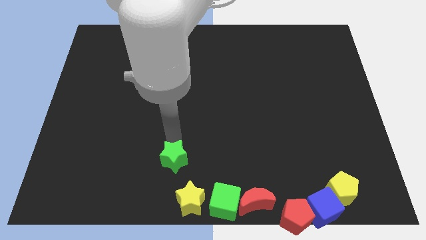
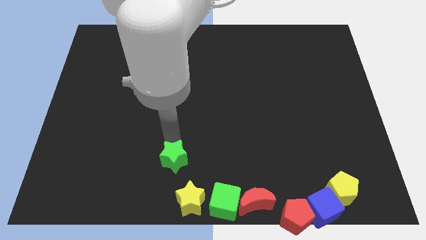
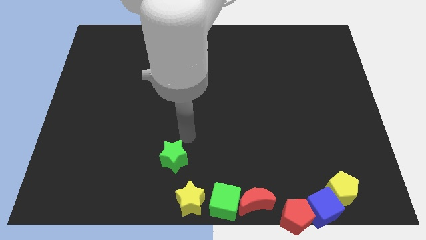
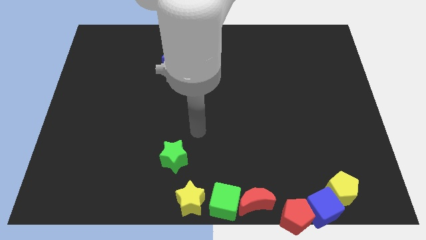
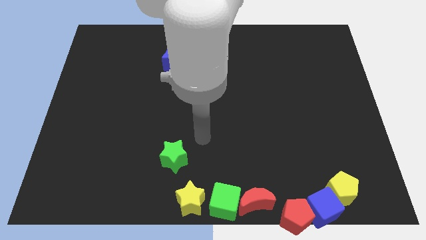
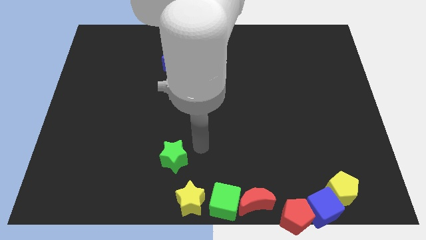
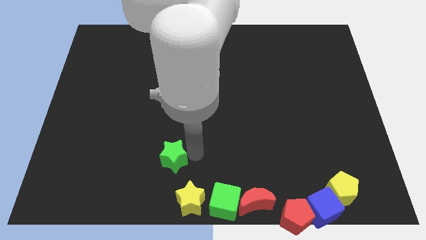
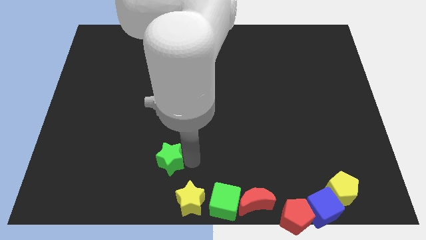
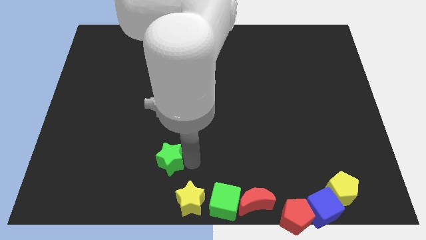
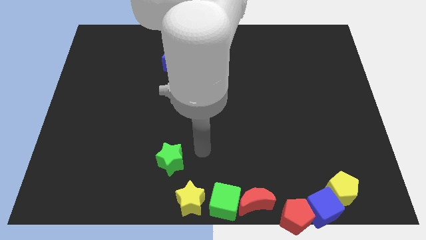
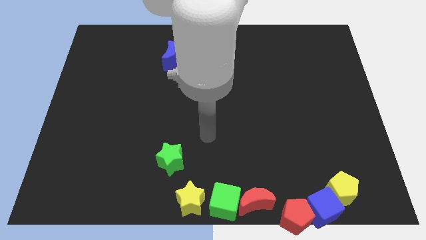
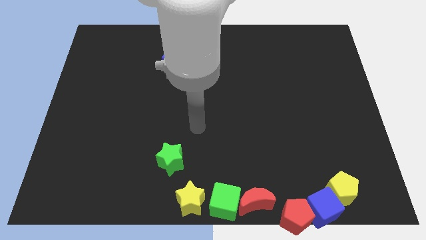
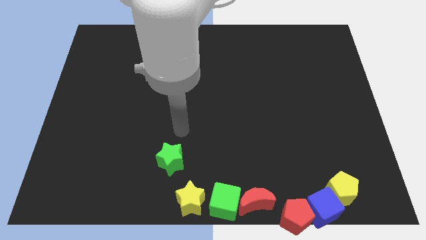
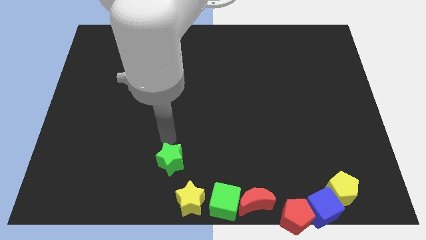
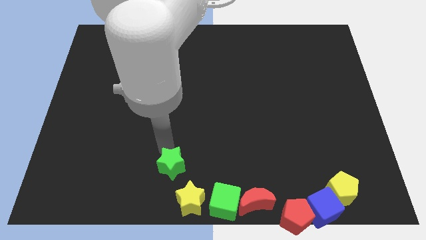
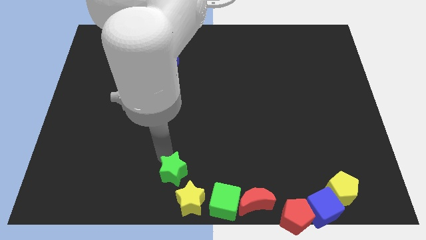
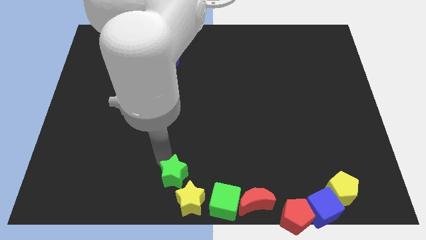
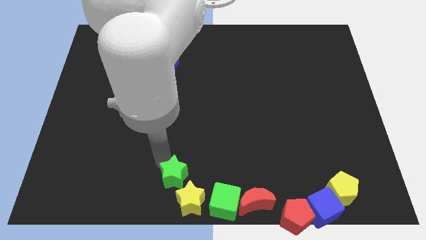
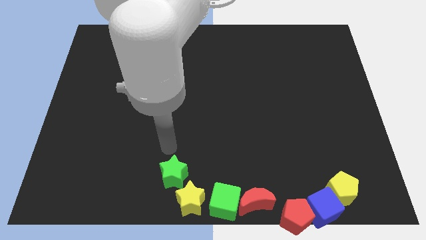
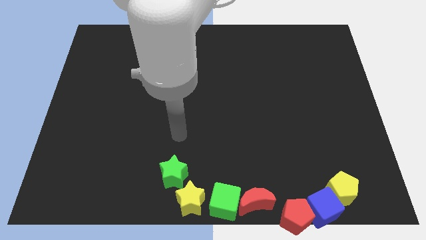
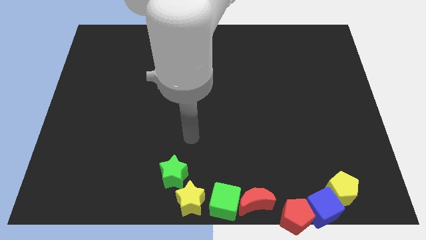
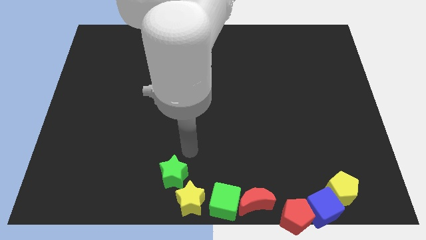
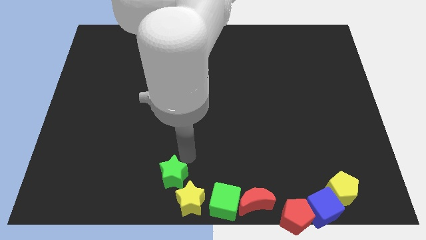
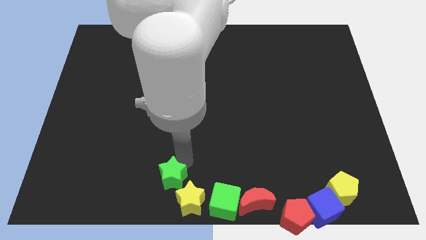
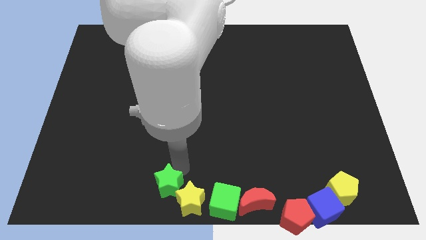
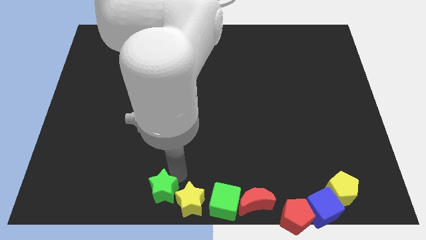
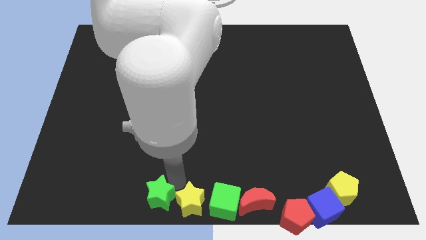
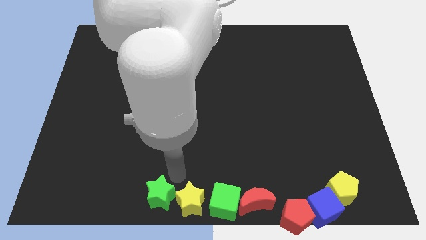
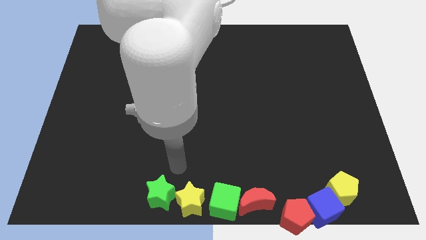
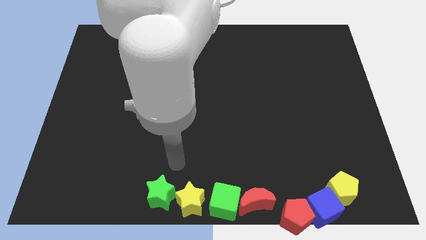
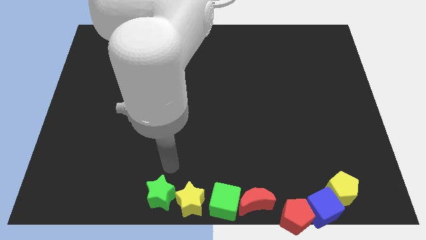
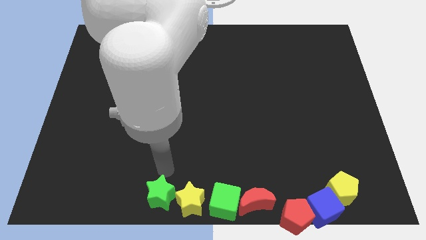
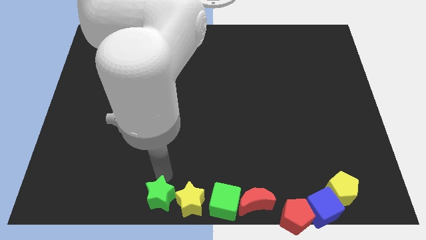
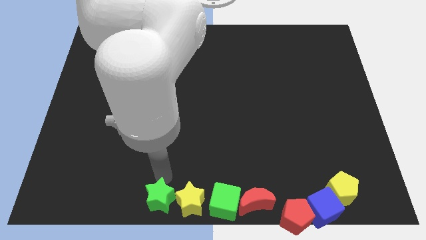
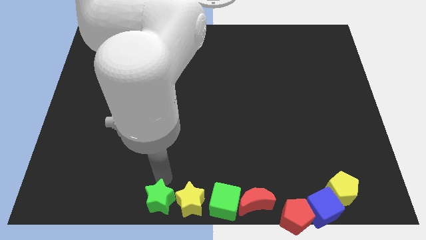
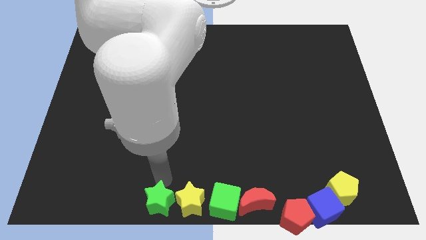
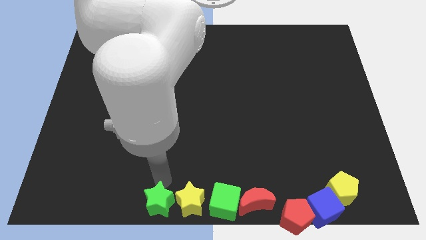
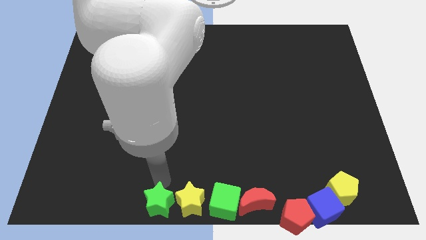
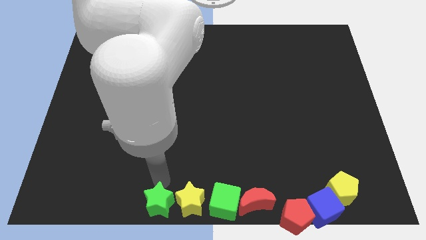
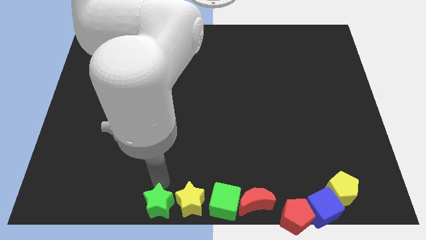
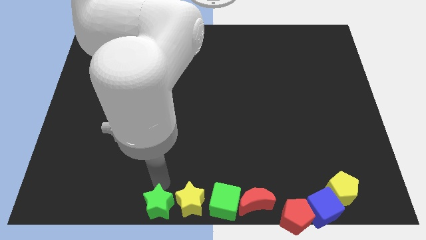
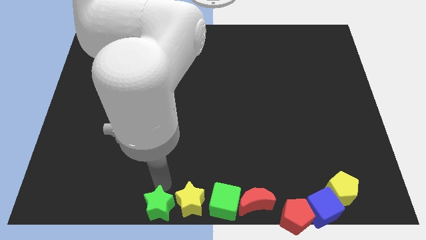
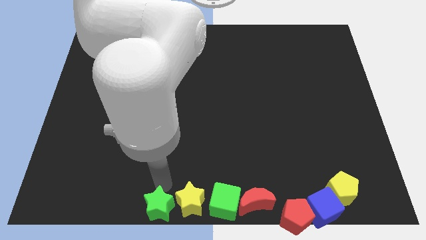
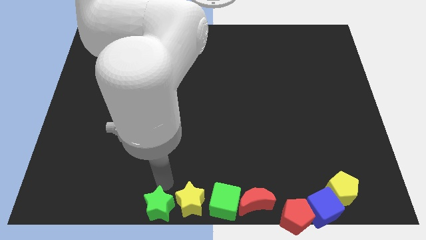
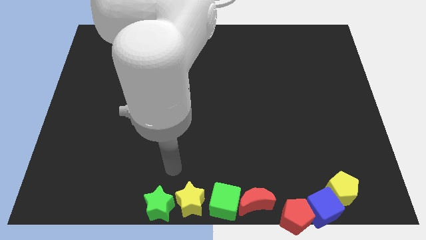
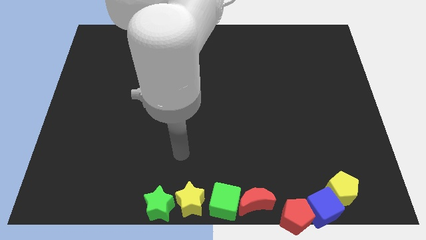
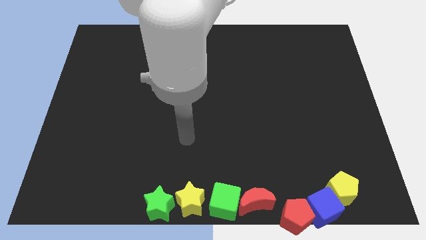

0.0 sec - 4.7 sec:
place the green star to the left yellow star

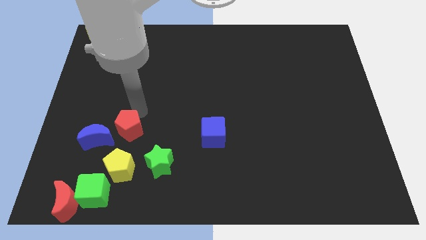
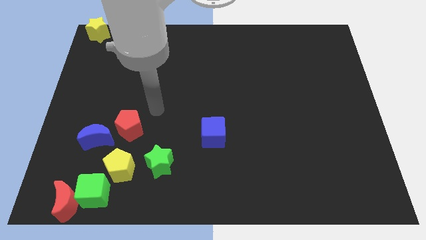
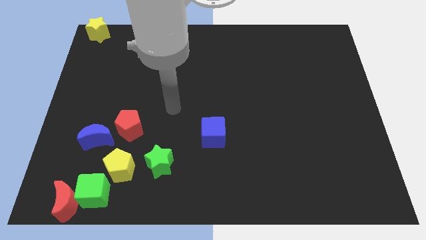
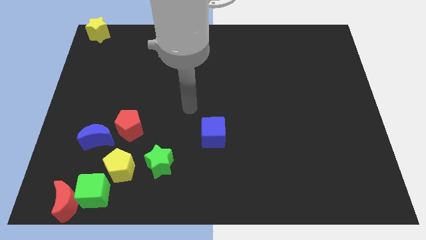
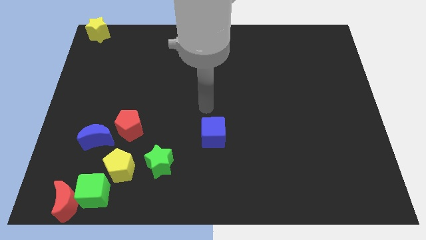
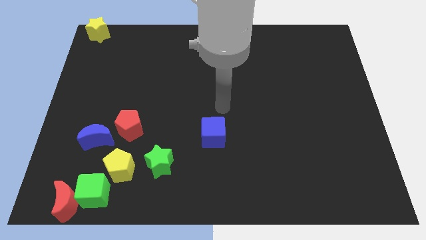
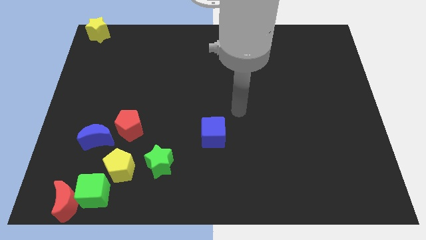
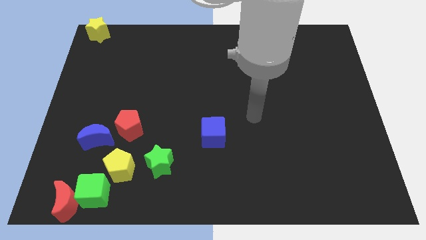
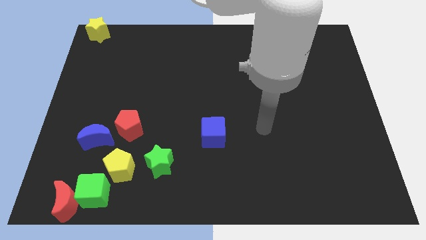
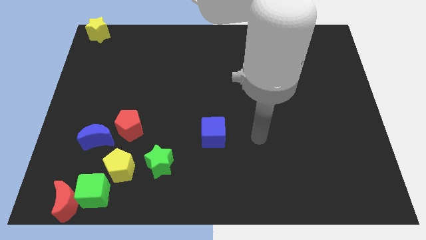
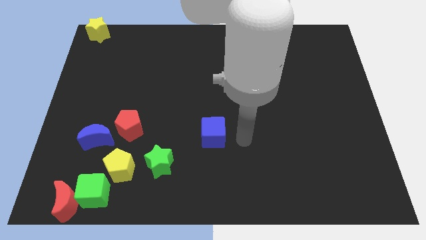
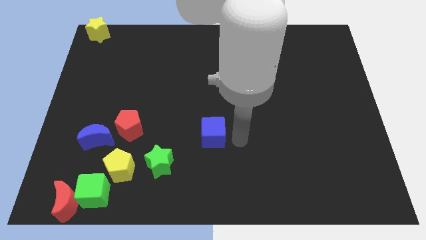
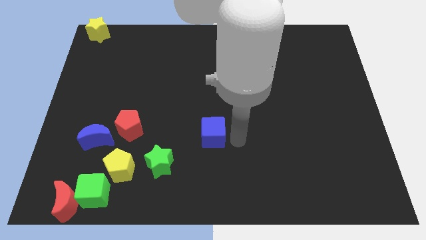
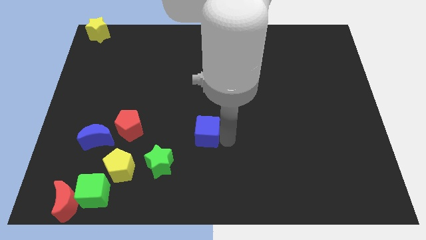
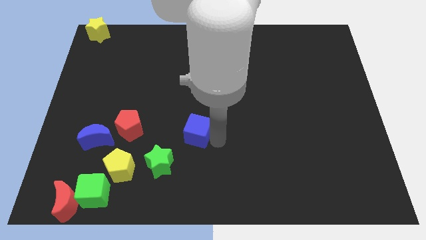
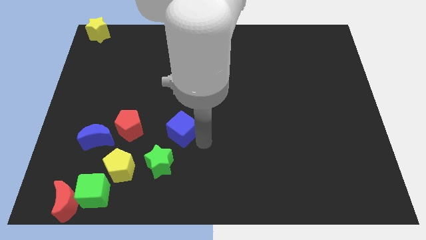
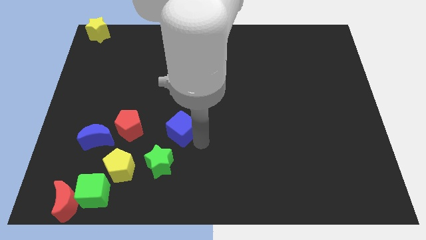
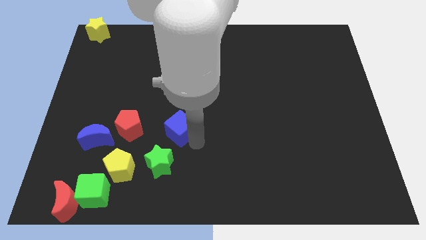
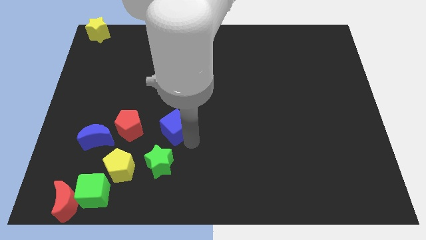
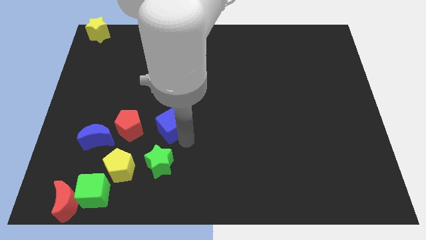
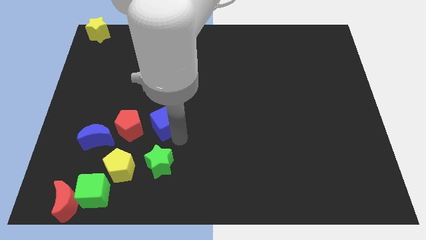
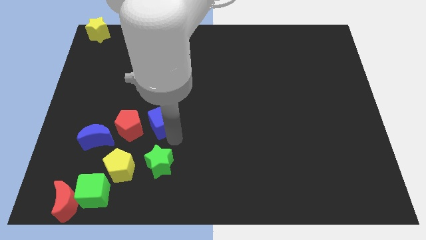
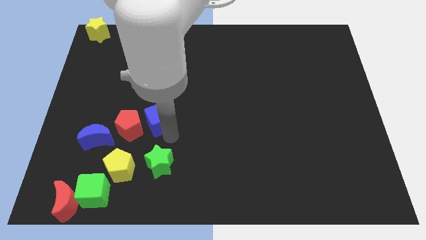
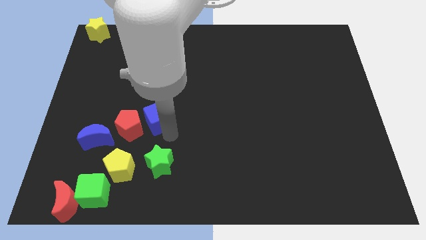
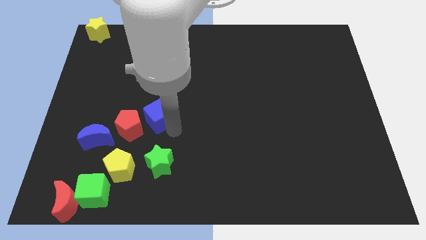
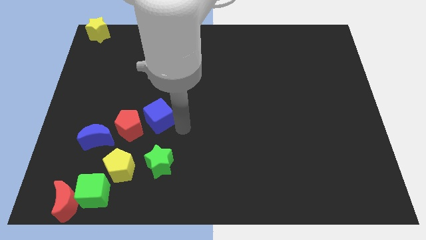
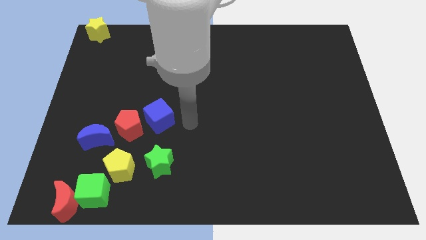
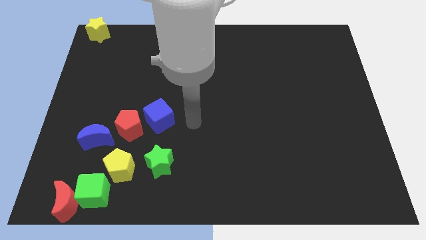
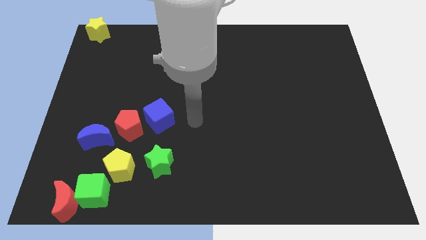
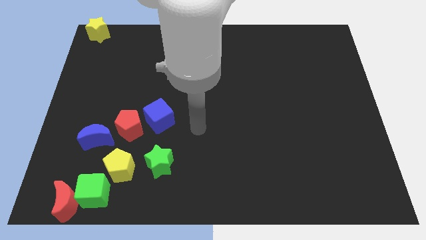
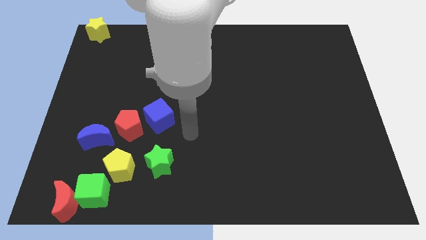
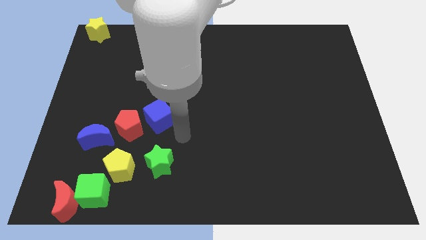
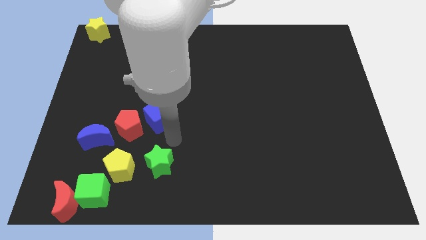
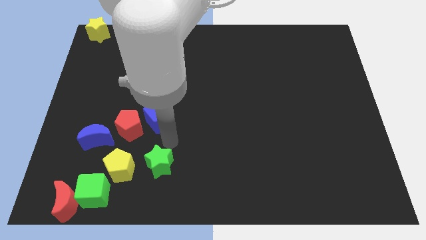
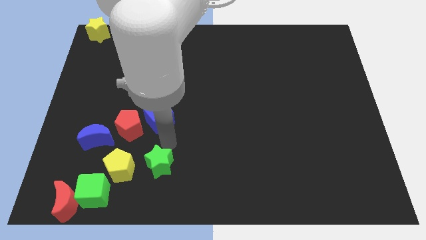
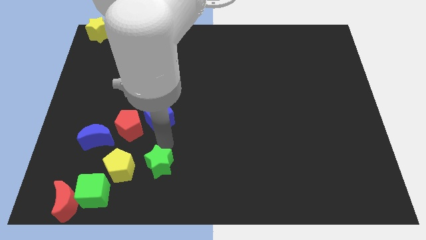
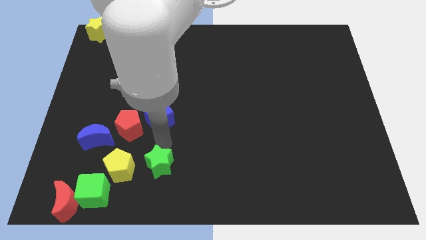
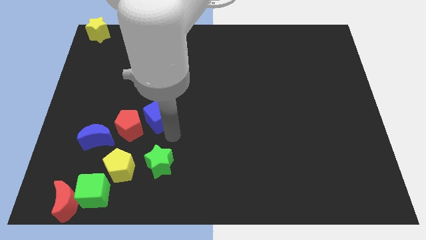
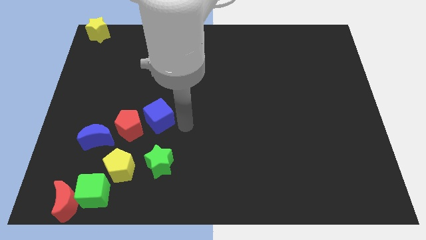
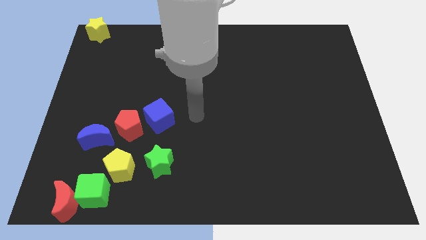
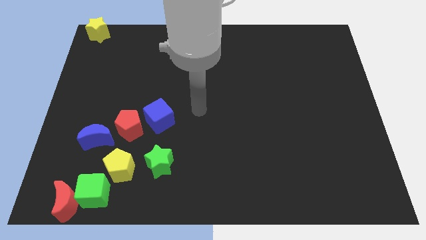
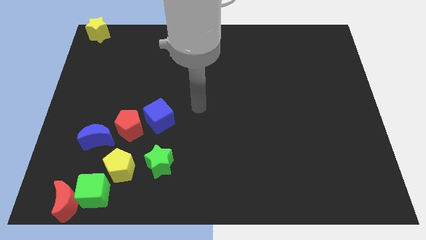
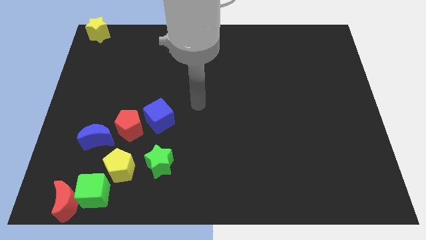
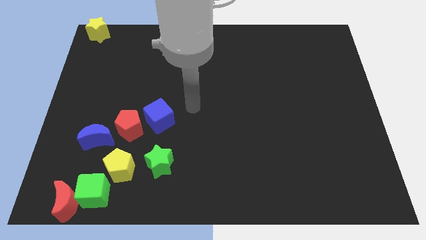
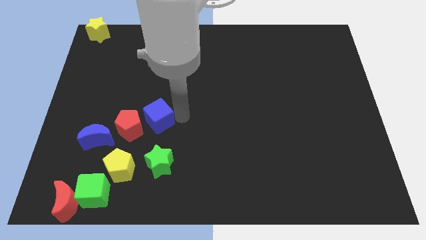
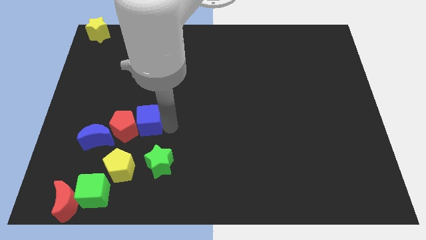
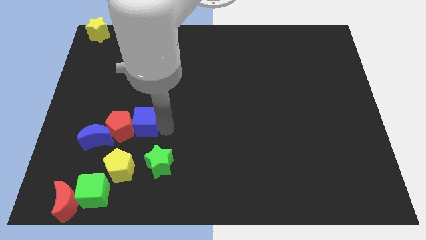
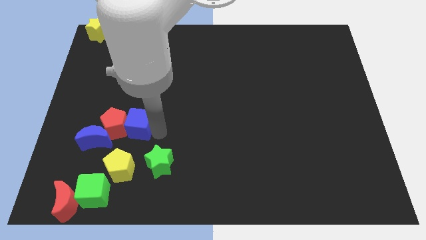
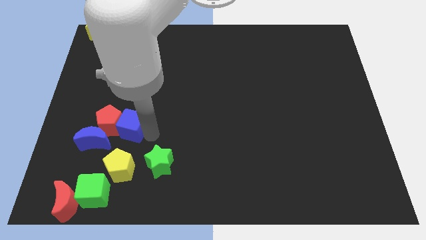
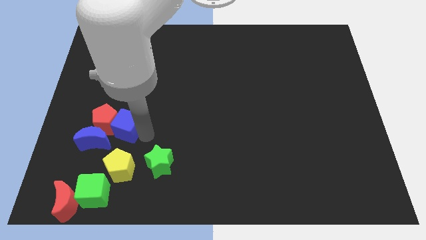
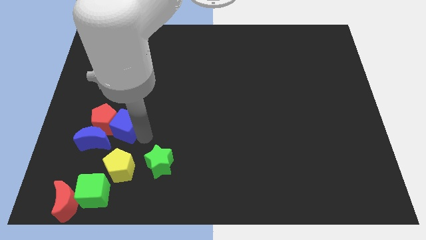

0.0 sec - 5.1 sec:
push the blue cube into the red pentagon
